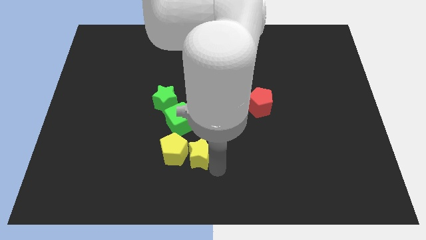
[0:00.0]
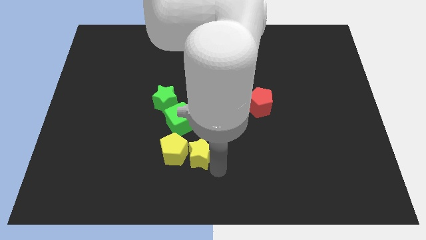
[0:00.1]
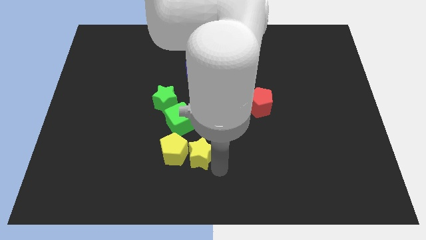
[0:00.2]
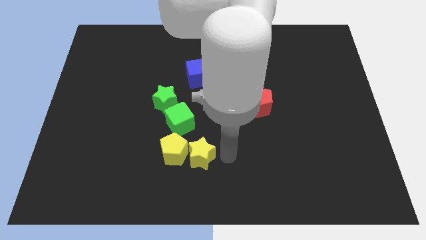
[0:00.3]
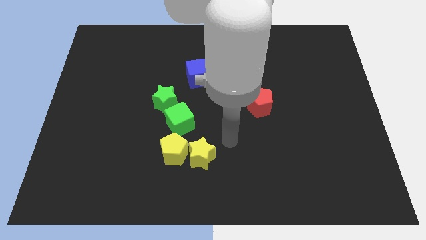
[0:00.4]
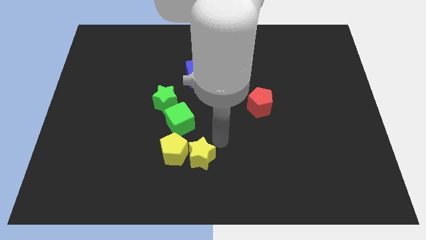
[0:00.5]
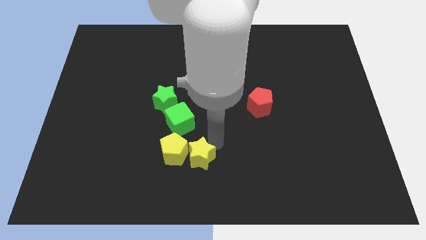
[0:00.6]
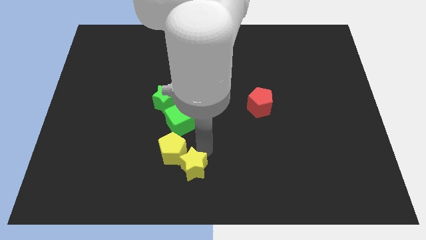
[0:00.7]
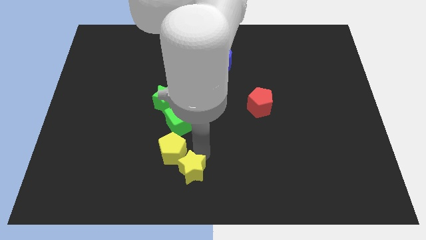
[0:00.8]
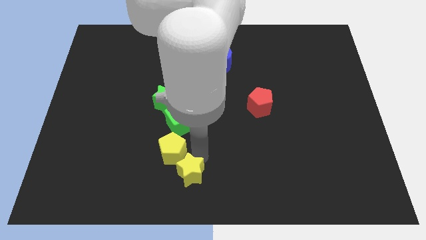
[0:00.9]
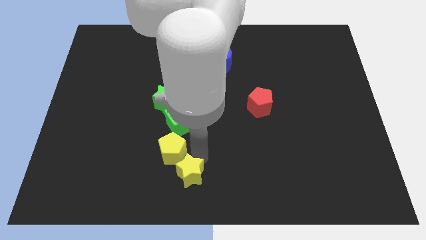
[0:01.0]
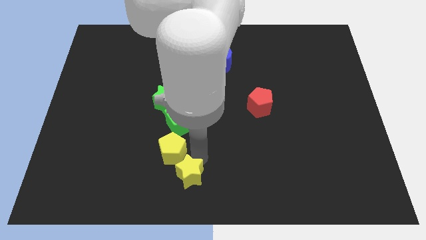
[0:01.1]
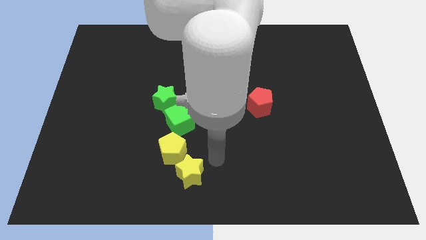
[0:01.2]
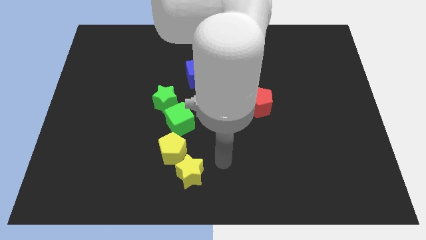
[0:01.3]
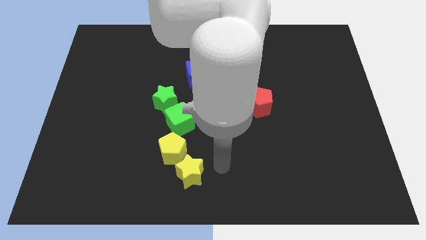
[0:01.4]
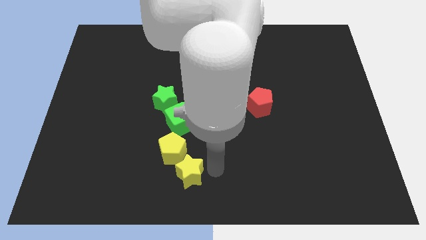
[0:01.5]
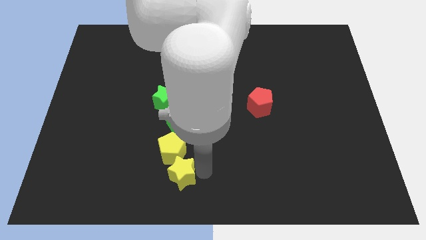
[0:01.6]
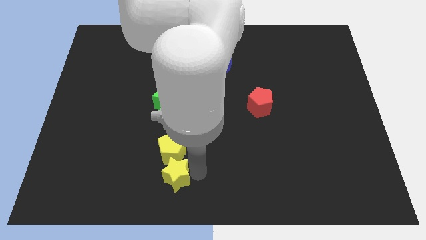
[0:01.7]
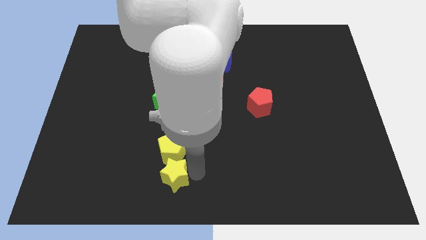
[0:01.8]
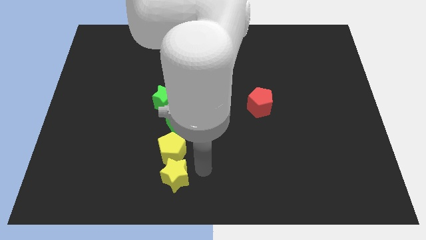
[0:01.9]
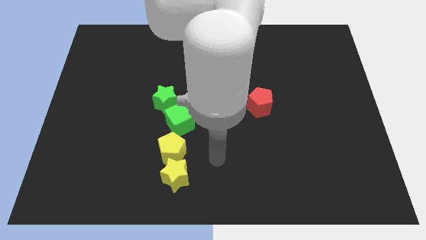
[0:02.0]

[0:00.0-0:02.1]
place yellow star to the down of yellow pentagon

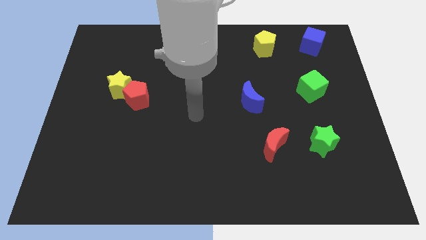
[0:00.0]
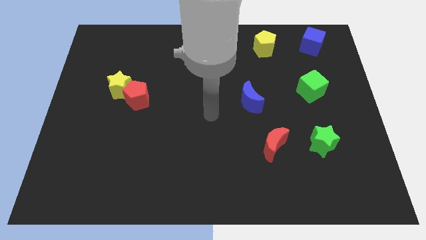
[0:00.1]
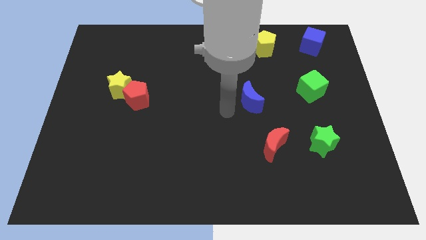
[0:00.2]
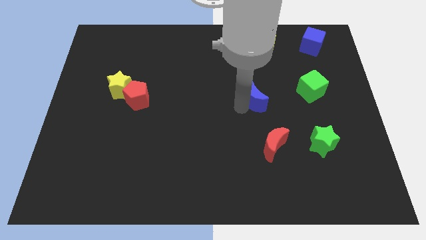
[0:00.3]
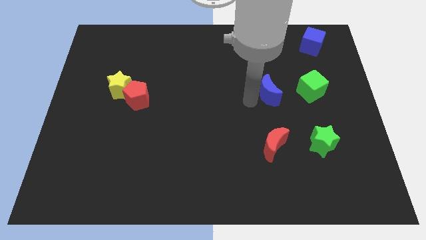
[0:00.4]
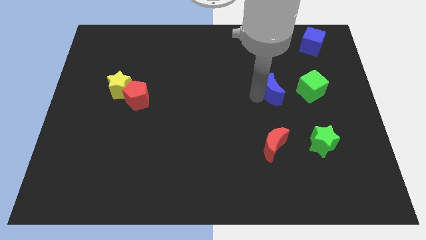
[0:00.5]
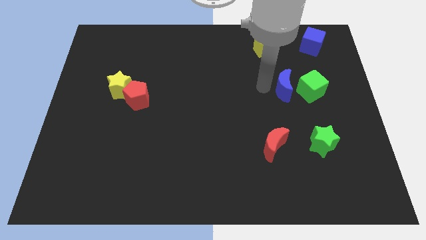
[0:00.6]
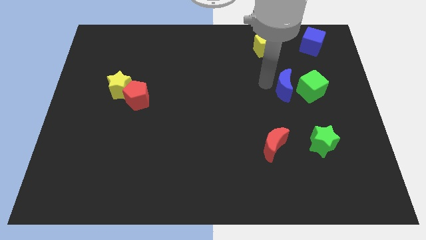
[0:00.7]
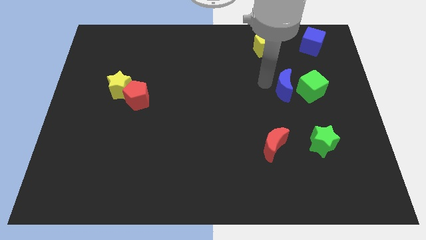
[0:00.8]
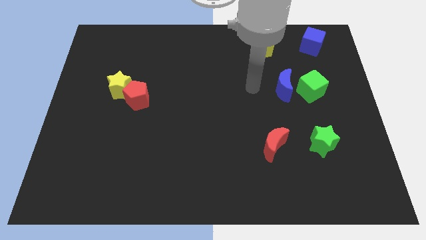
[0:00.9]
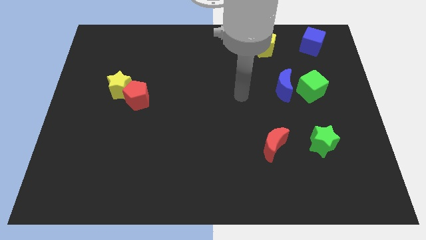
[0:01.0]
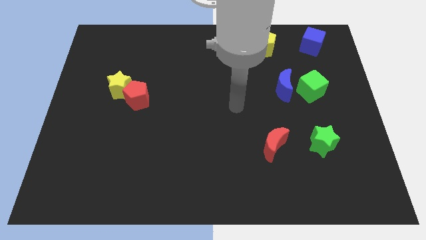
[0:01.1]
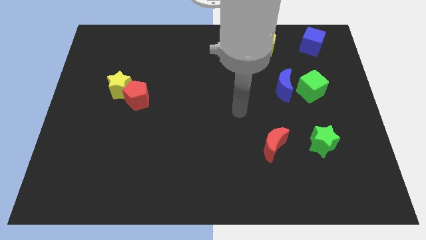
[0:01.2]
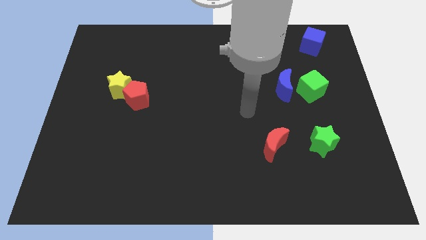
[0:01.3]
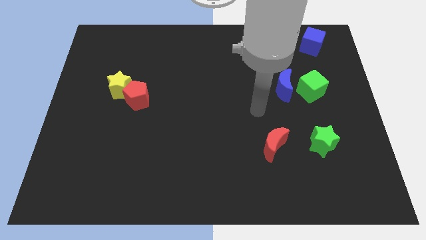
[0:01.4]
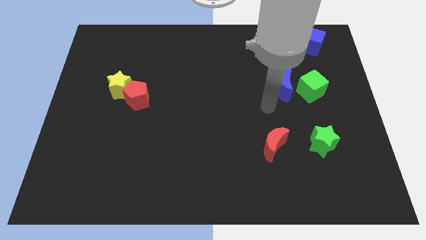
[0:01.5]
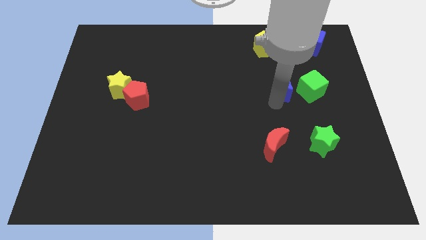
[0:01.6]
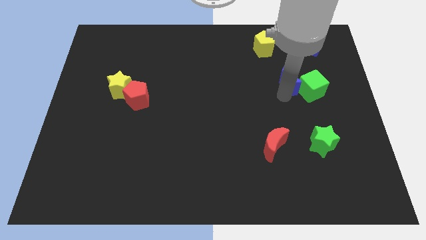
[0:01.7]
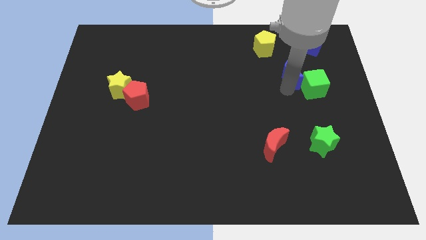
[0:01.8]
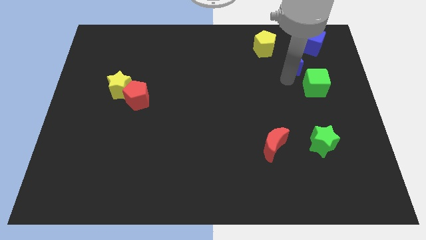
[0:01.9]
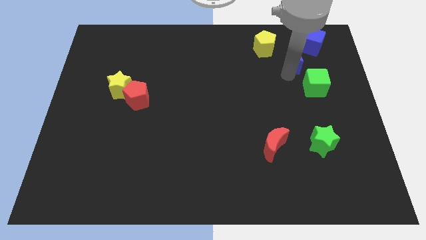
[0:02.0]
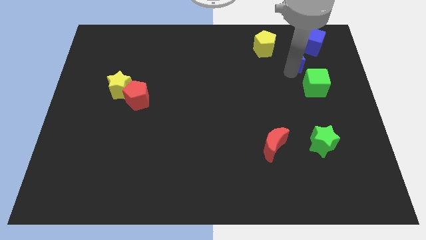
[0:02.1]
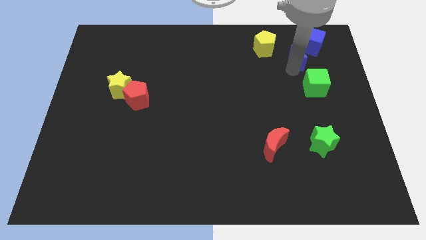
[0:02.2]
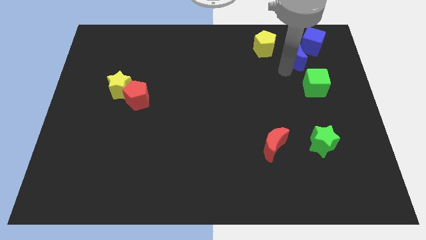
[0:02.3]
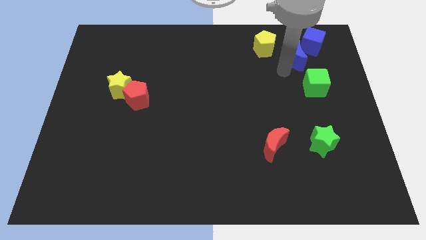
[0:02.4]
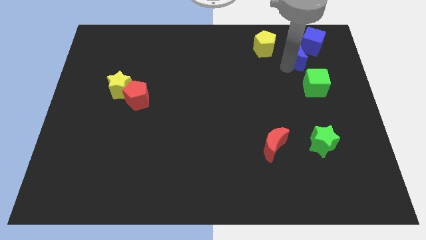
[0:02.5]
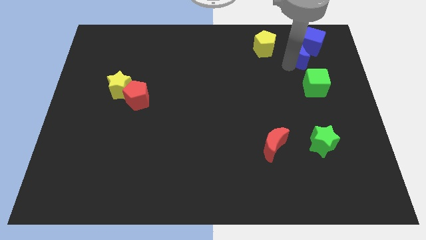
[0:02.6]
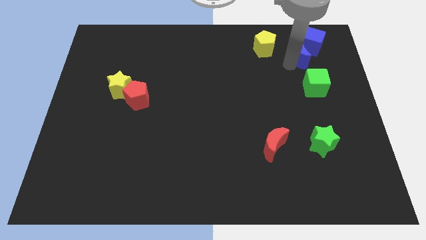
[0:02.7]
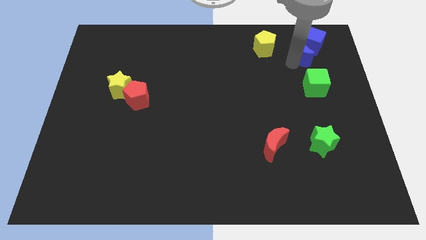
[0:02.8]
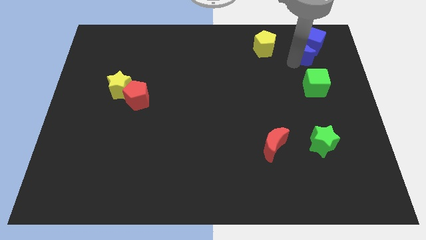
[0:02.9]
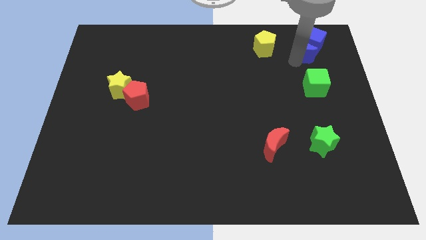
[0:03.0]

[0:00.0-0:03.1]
move blue moon close to blue cube

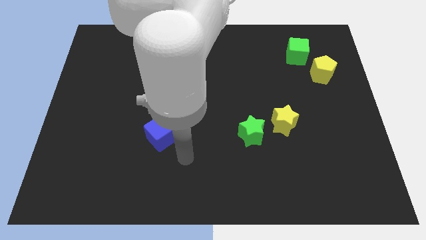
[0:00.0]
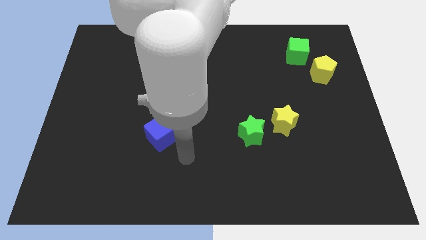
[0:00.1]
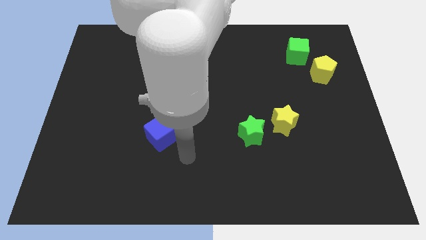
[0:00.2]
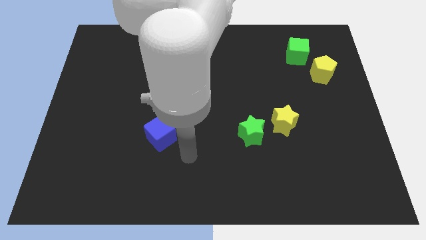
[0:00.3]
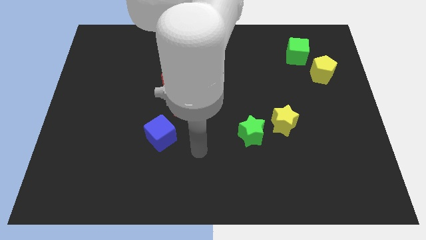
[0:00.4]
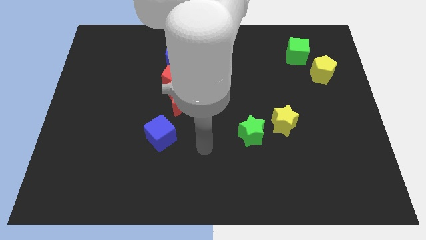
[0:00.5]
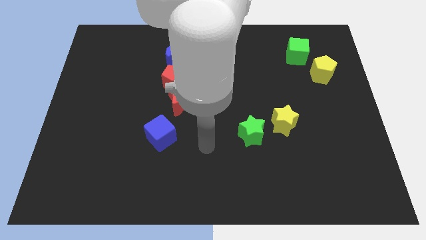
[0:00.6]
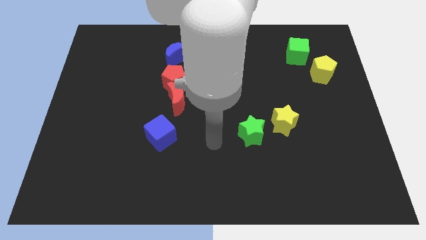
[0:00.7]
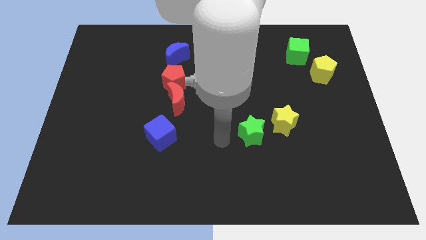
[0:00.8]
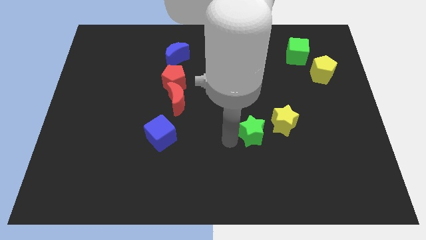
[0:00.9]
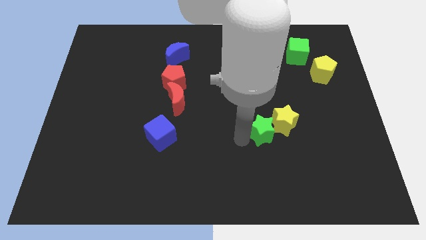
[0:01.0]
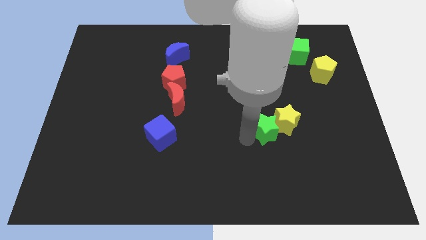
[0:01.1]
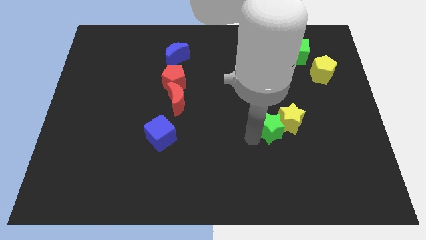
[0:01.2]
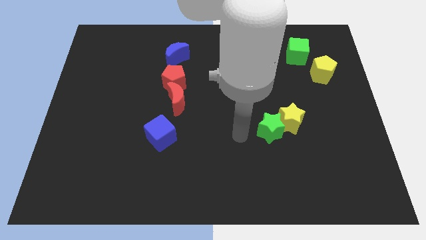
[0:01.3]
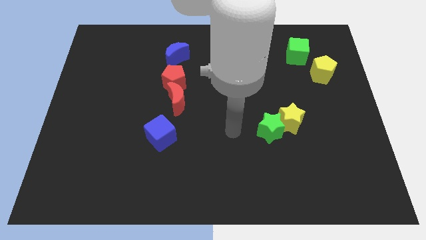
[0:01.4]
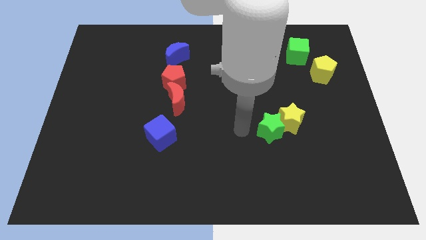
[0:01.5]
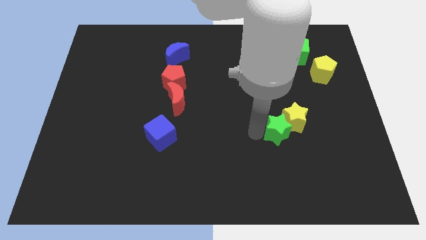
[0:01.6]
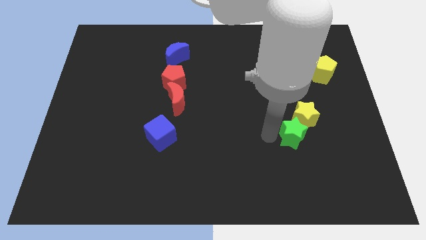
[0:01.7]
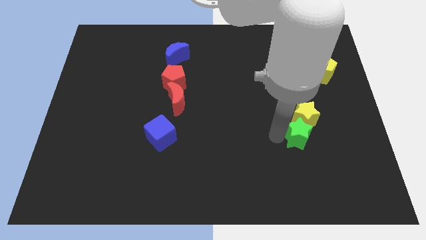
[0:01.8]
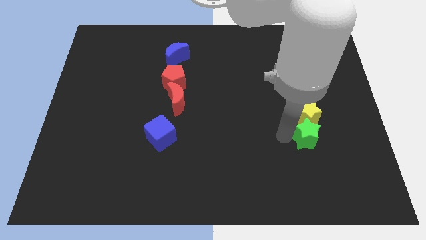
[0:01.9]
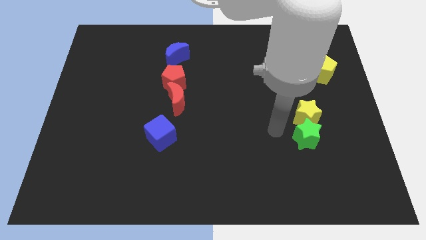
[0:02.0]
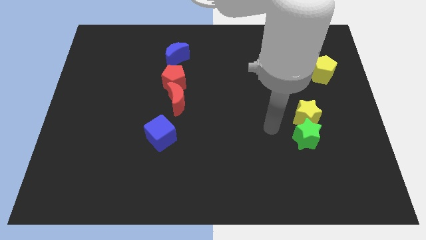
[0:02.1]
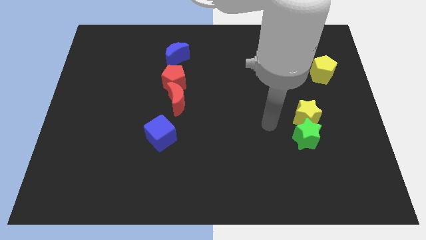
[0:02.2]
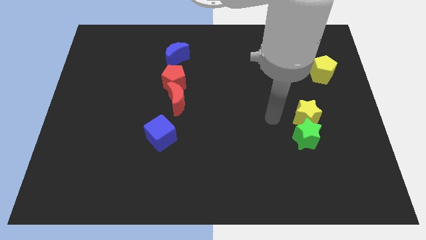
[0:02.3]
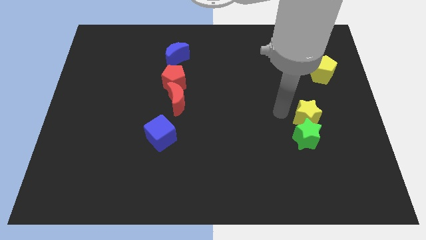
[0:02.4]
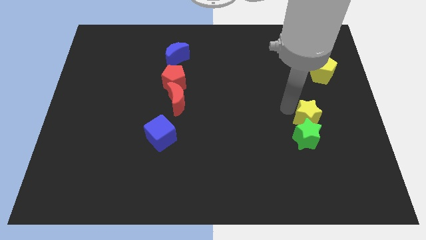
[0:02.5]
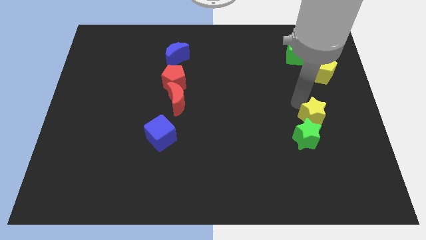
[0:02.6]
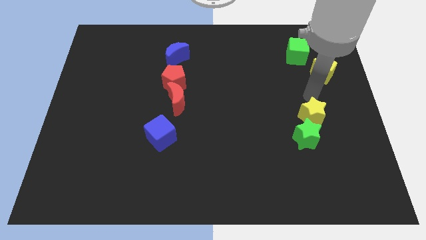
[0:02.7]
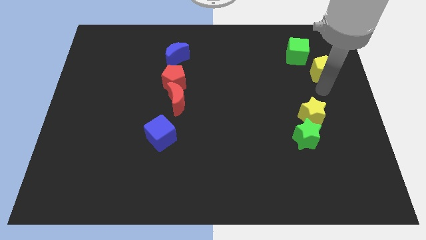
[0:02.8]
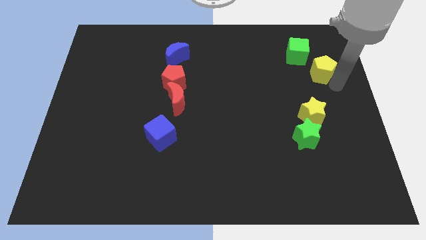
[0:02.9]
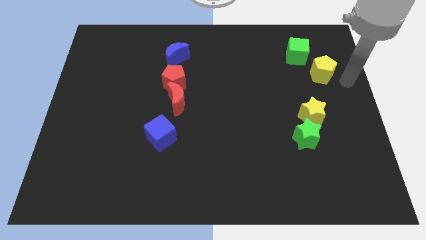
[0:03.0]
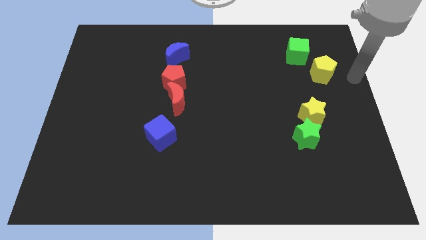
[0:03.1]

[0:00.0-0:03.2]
place the stars in a vertical line

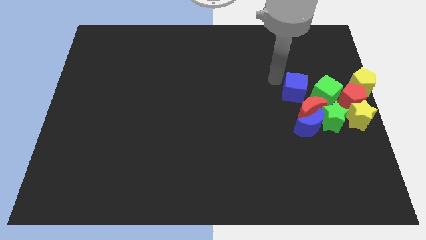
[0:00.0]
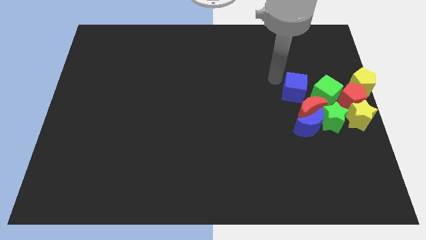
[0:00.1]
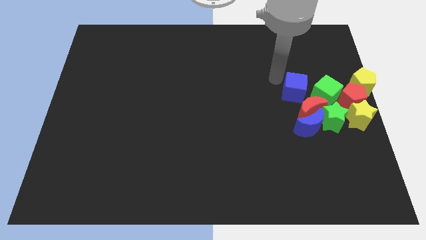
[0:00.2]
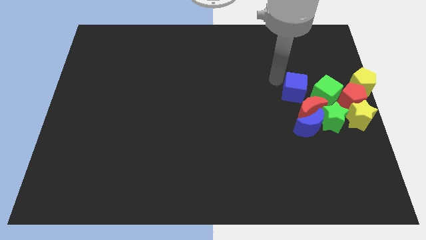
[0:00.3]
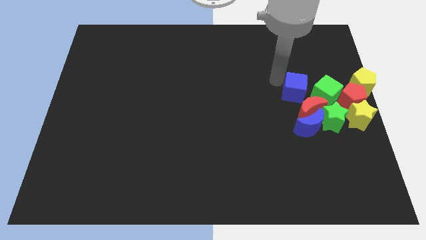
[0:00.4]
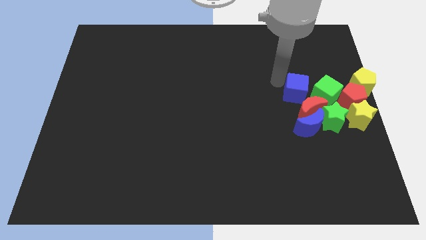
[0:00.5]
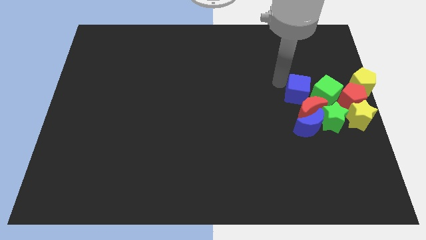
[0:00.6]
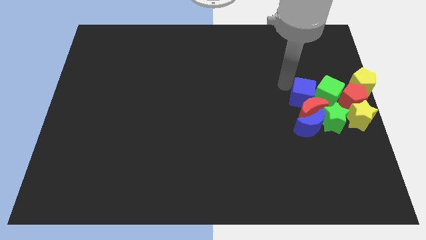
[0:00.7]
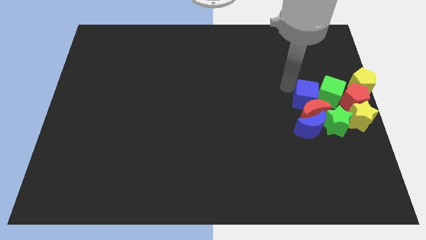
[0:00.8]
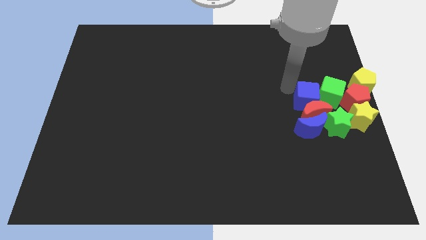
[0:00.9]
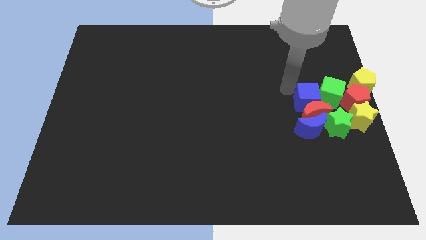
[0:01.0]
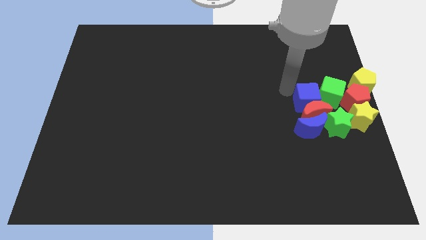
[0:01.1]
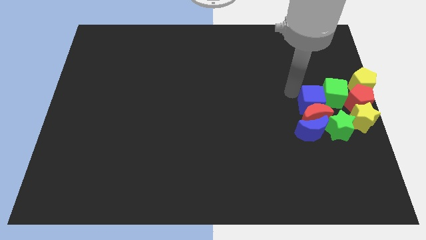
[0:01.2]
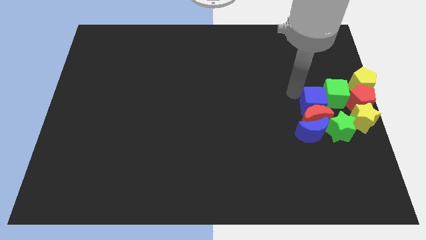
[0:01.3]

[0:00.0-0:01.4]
push the blue cube into the group of blocks
